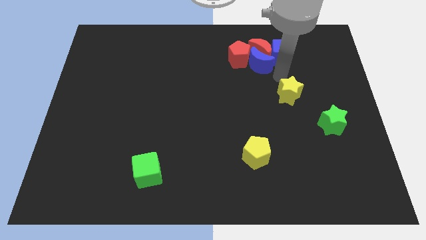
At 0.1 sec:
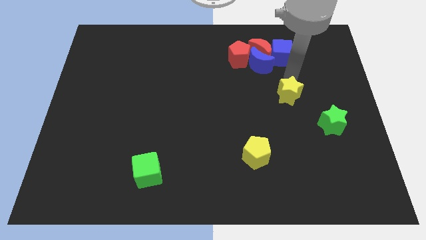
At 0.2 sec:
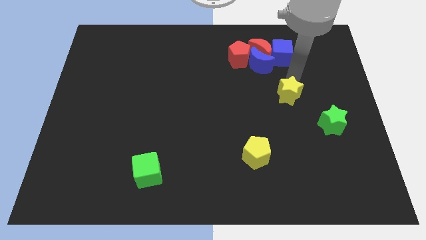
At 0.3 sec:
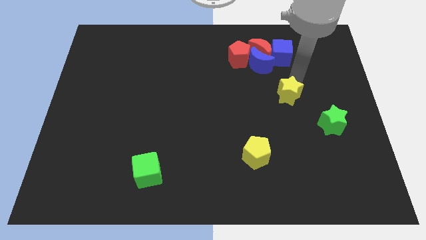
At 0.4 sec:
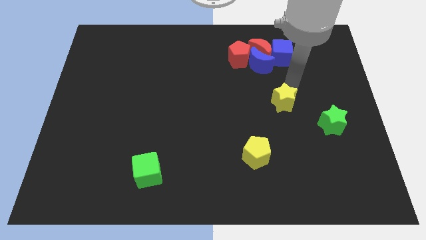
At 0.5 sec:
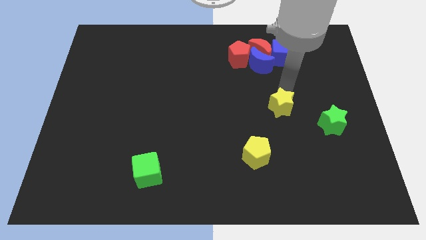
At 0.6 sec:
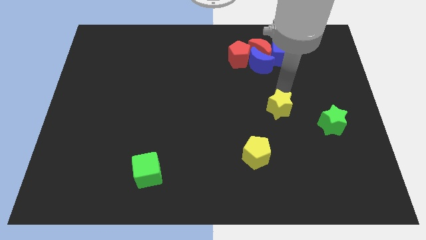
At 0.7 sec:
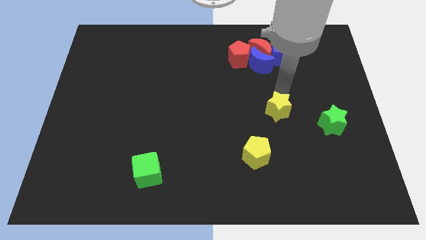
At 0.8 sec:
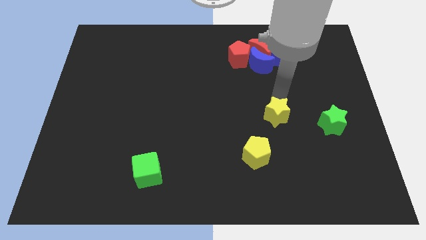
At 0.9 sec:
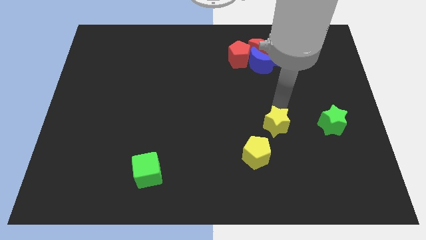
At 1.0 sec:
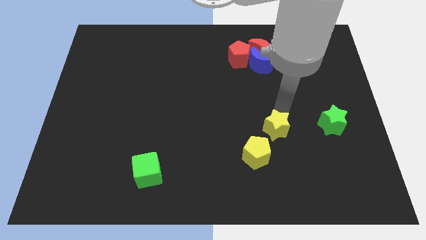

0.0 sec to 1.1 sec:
place the yellow star to the left of the green star

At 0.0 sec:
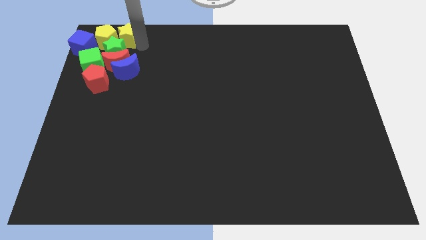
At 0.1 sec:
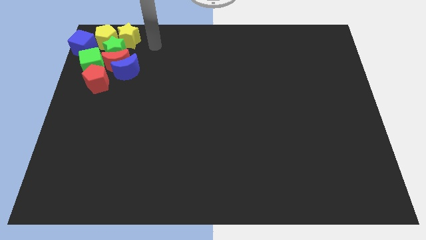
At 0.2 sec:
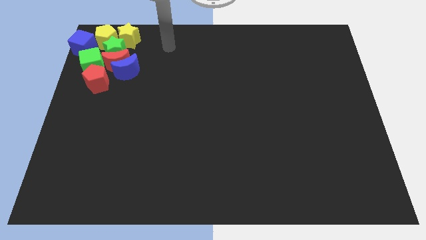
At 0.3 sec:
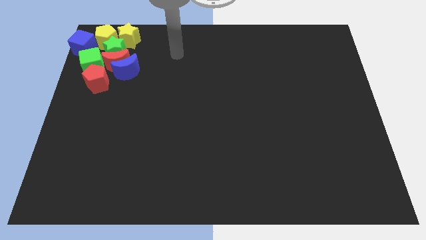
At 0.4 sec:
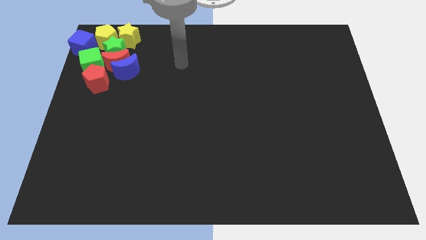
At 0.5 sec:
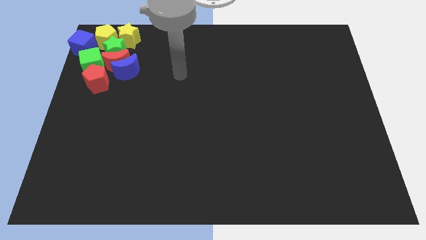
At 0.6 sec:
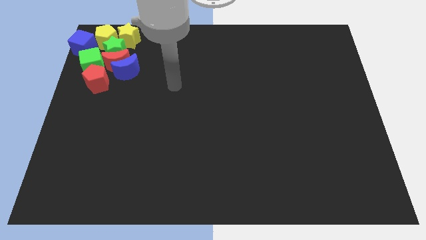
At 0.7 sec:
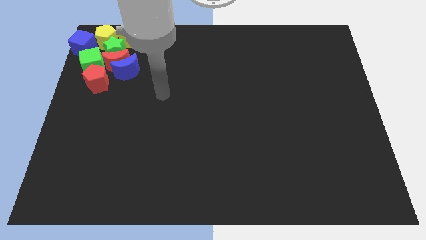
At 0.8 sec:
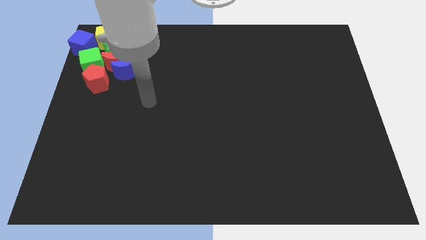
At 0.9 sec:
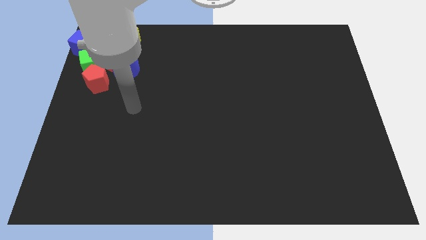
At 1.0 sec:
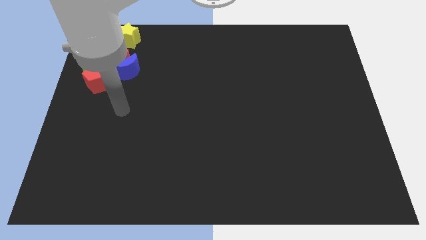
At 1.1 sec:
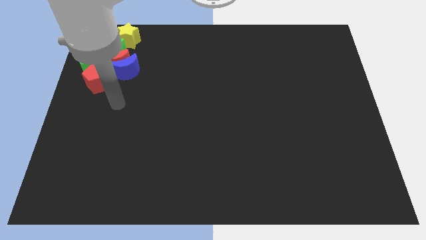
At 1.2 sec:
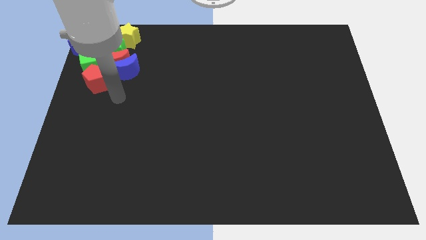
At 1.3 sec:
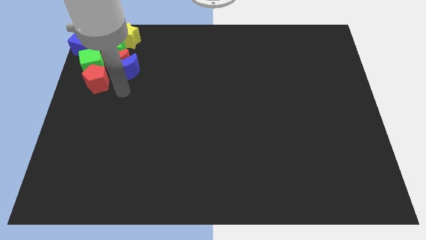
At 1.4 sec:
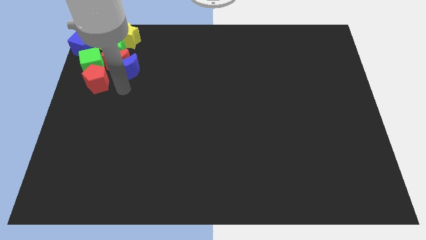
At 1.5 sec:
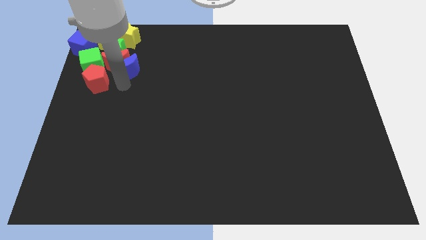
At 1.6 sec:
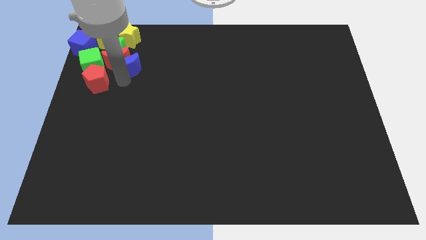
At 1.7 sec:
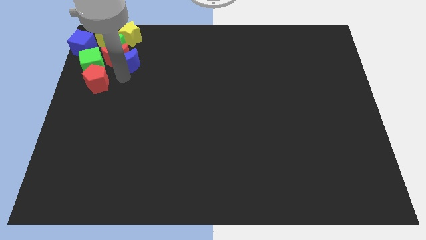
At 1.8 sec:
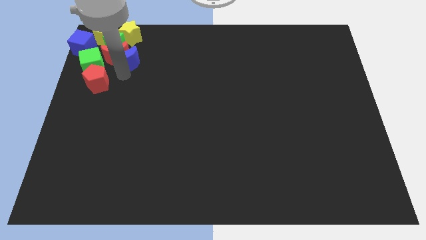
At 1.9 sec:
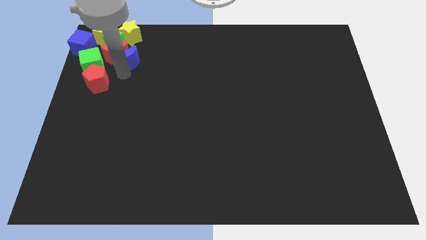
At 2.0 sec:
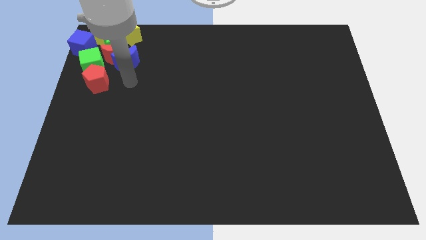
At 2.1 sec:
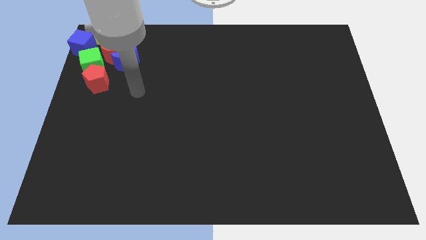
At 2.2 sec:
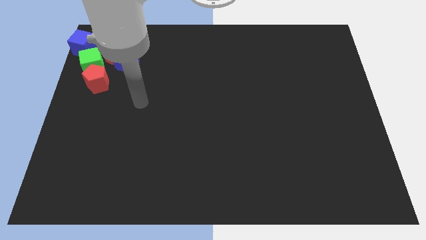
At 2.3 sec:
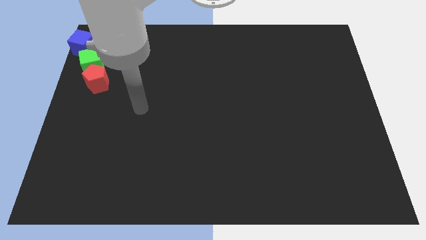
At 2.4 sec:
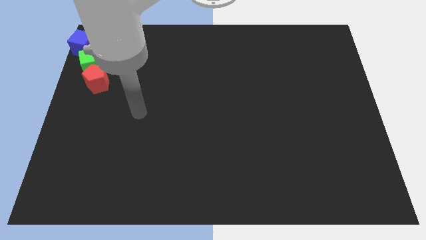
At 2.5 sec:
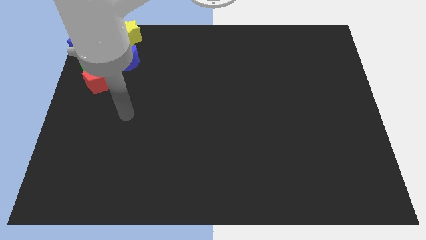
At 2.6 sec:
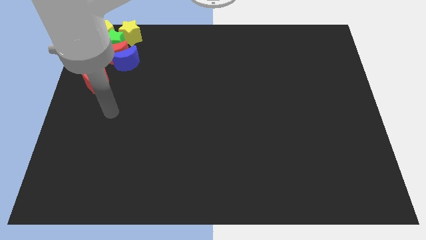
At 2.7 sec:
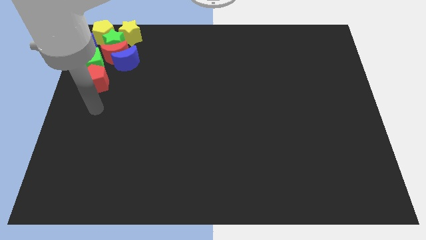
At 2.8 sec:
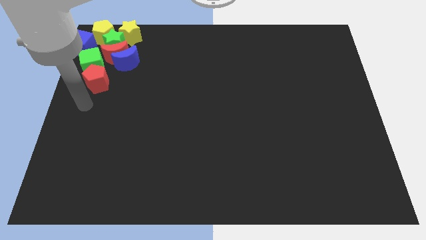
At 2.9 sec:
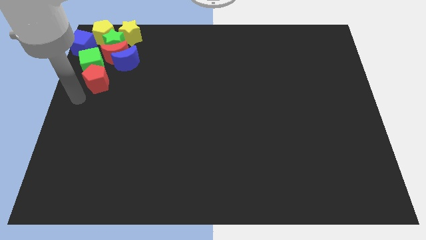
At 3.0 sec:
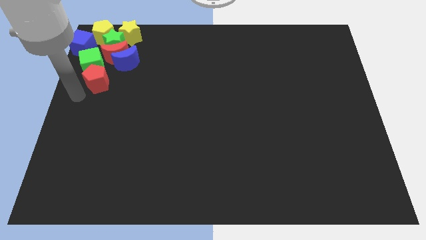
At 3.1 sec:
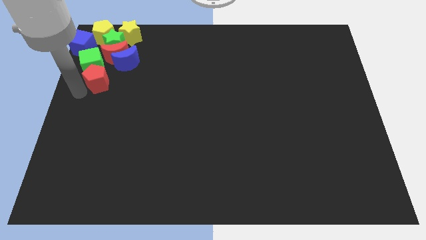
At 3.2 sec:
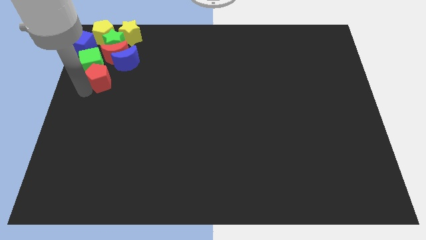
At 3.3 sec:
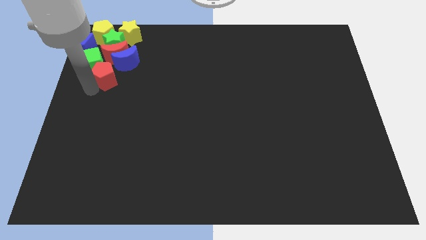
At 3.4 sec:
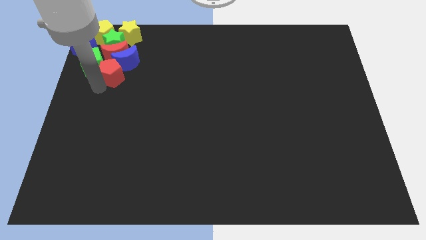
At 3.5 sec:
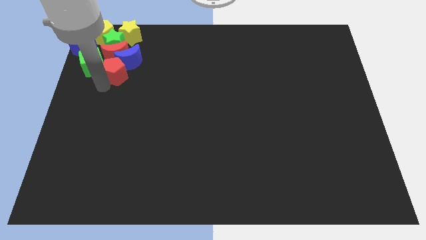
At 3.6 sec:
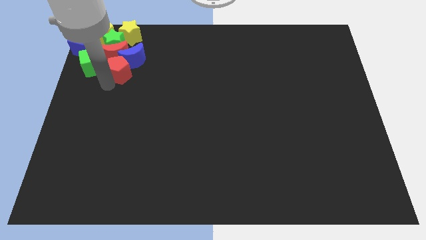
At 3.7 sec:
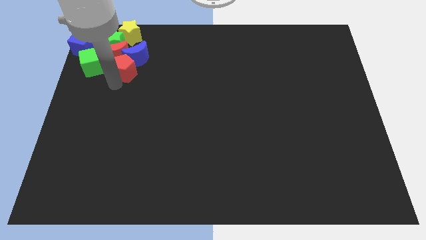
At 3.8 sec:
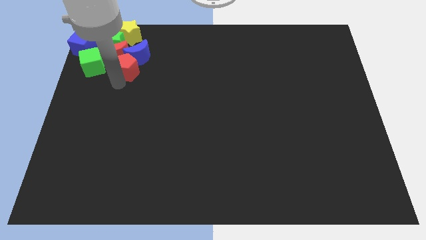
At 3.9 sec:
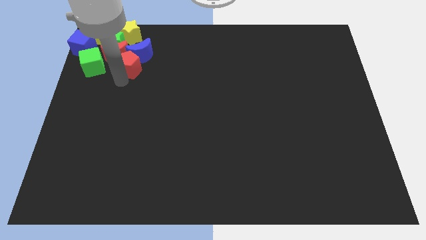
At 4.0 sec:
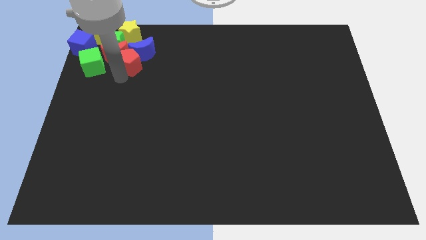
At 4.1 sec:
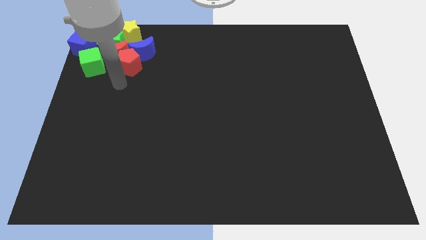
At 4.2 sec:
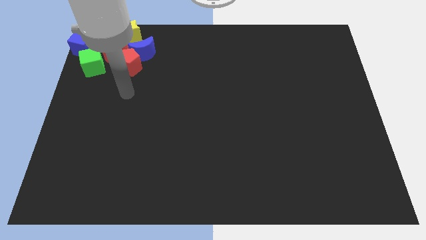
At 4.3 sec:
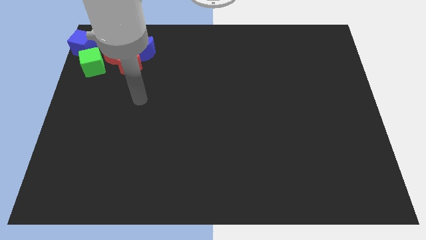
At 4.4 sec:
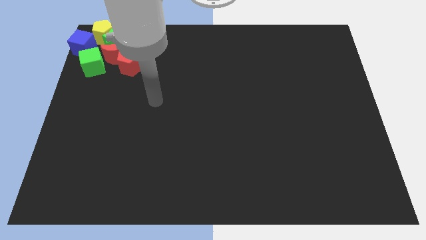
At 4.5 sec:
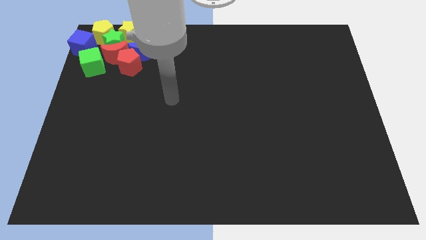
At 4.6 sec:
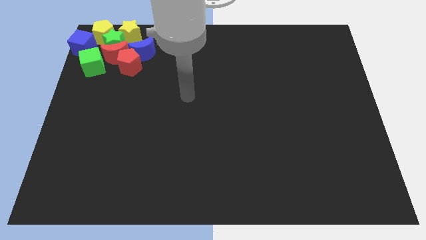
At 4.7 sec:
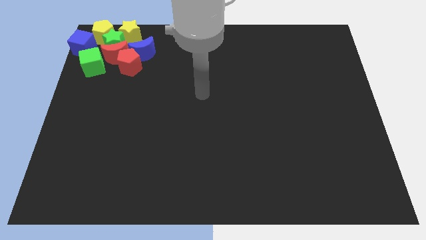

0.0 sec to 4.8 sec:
adjust the group of blocks at the top left of the table

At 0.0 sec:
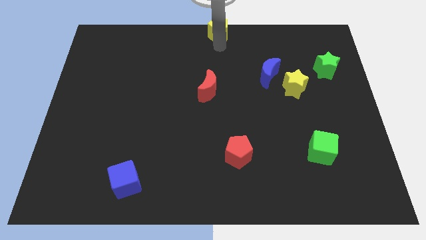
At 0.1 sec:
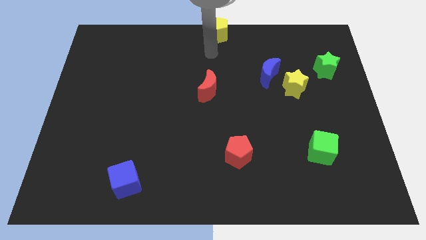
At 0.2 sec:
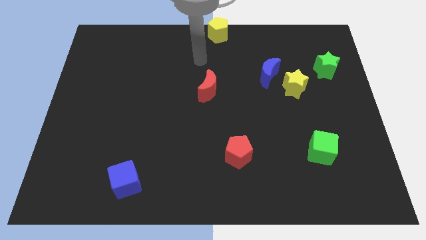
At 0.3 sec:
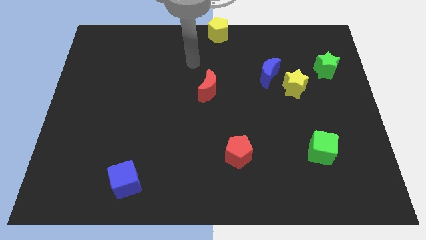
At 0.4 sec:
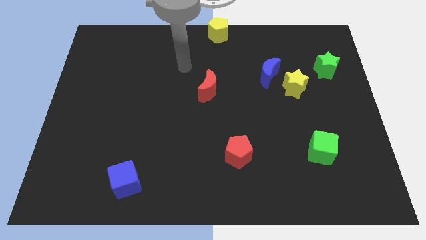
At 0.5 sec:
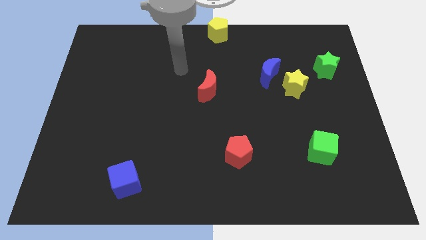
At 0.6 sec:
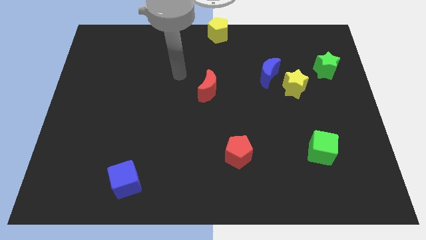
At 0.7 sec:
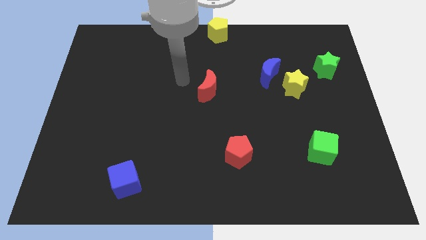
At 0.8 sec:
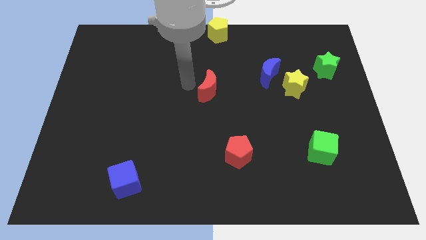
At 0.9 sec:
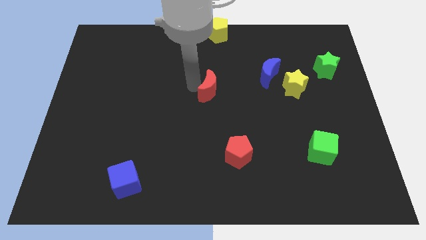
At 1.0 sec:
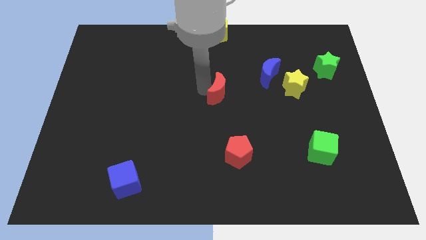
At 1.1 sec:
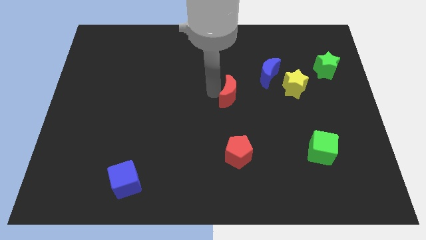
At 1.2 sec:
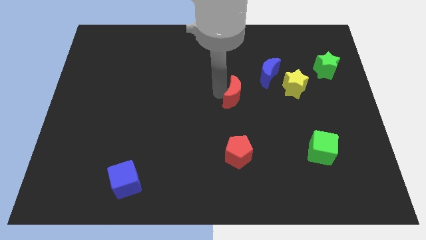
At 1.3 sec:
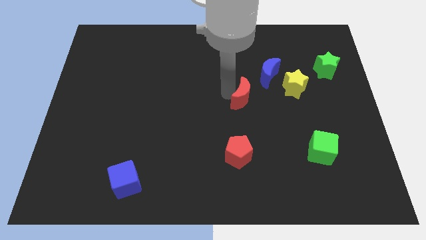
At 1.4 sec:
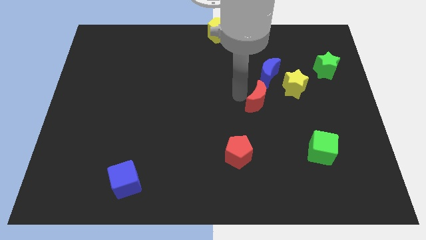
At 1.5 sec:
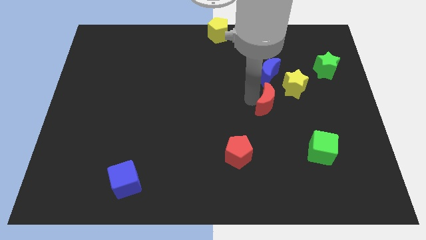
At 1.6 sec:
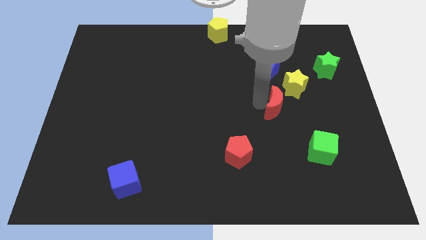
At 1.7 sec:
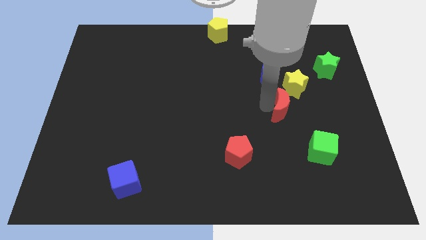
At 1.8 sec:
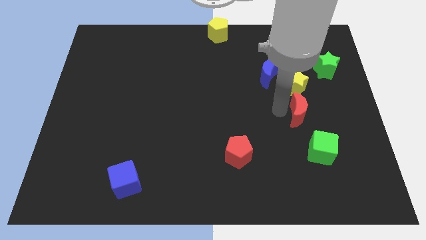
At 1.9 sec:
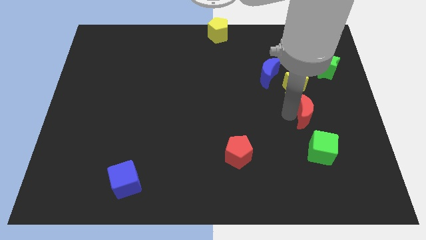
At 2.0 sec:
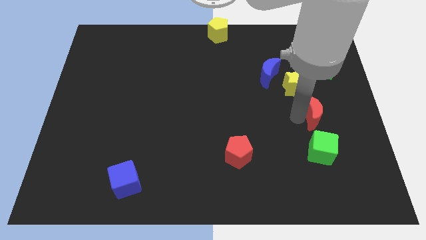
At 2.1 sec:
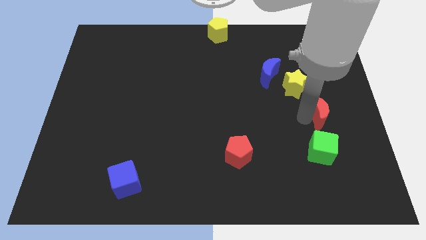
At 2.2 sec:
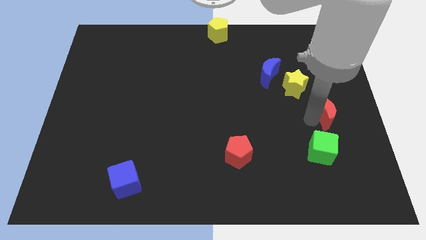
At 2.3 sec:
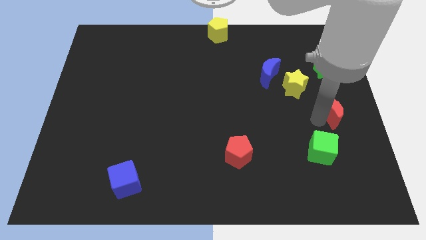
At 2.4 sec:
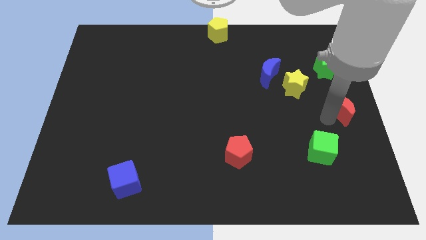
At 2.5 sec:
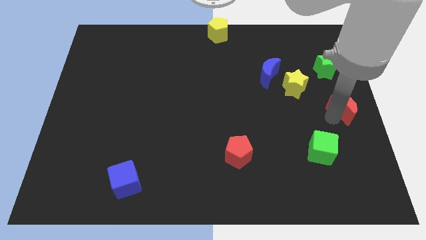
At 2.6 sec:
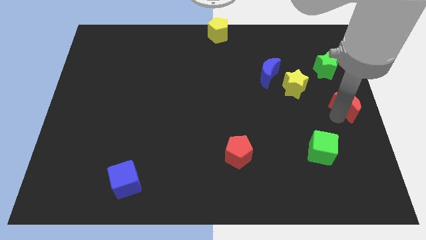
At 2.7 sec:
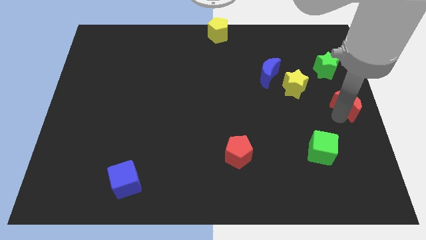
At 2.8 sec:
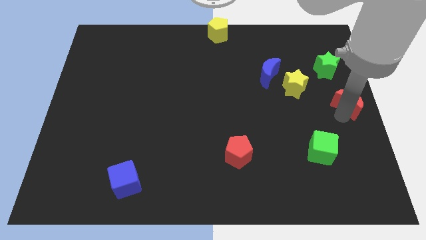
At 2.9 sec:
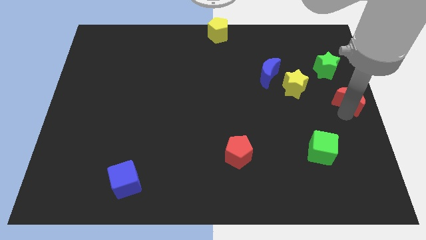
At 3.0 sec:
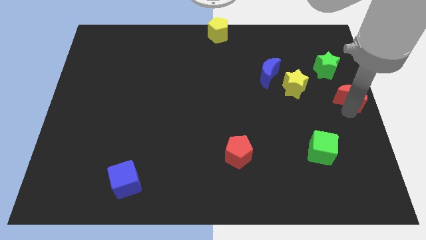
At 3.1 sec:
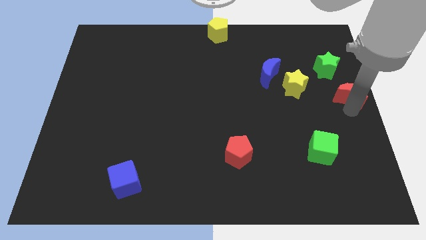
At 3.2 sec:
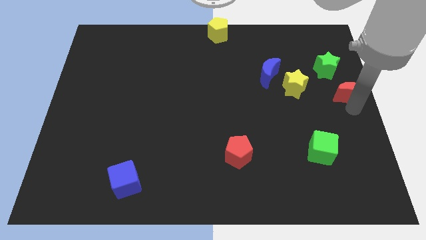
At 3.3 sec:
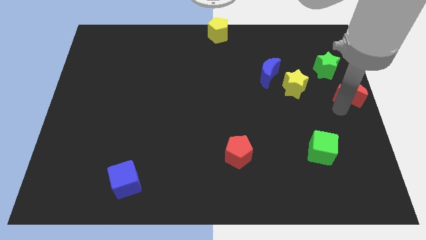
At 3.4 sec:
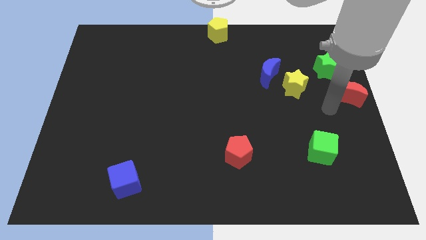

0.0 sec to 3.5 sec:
push the red moon to the bottom side of the green star
